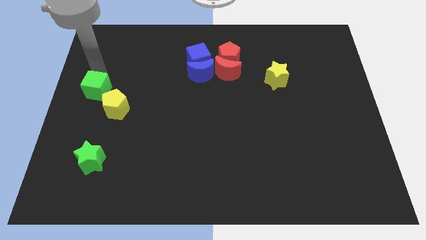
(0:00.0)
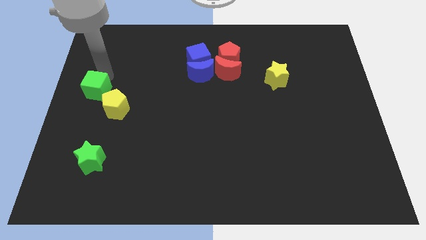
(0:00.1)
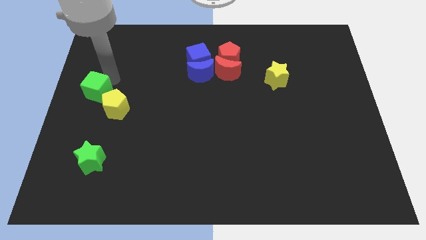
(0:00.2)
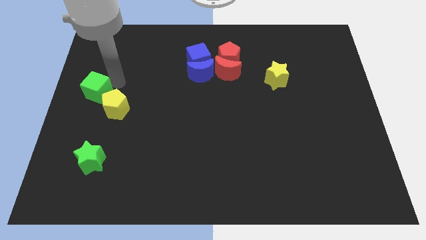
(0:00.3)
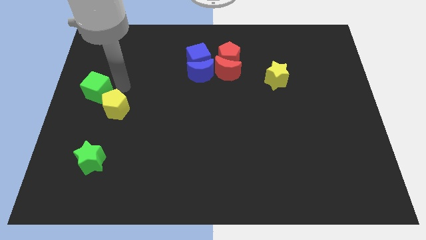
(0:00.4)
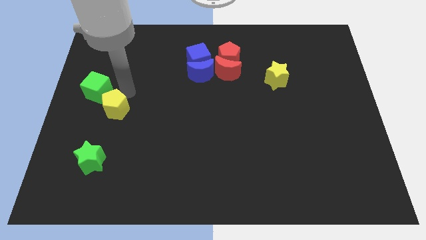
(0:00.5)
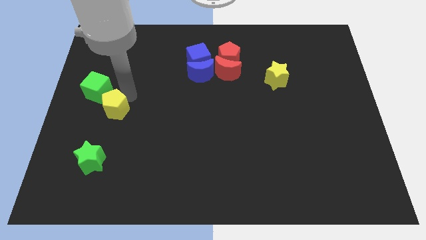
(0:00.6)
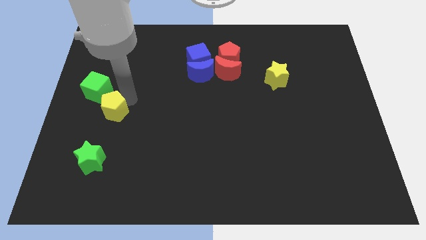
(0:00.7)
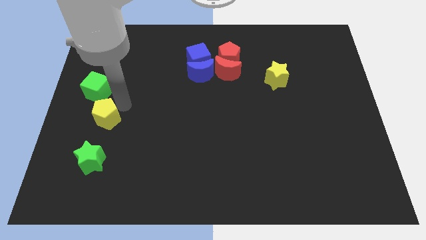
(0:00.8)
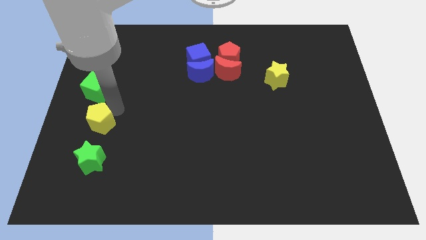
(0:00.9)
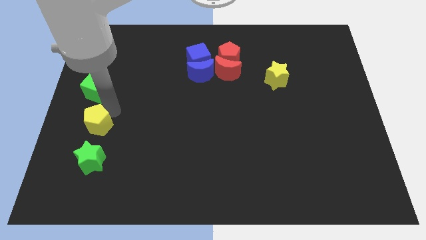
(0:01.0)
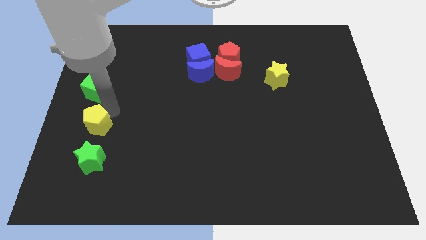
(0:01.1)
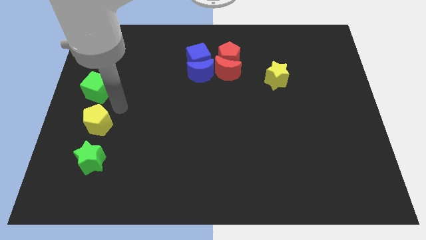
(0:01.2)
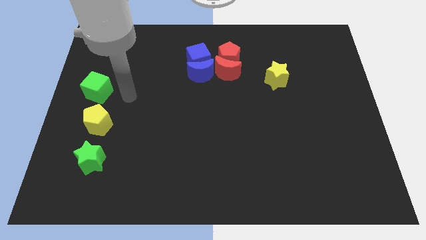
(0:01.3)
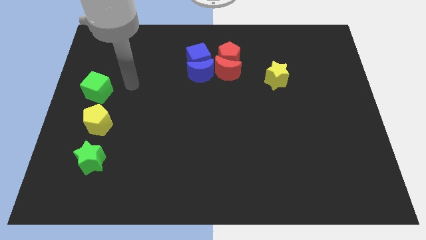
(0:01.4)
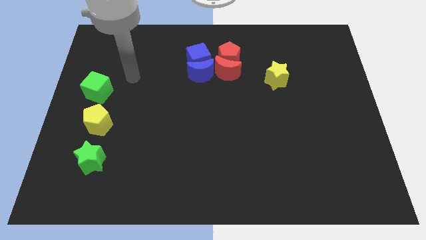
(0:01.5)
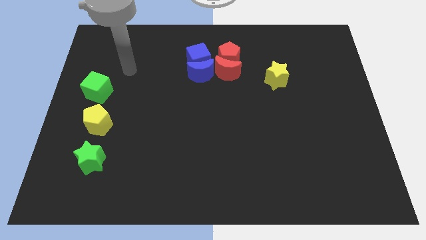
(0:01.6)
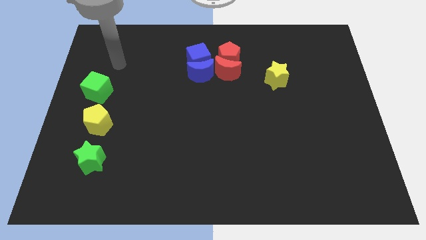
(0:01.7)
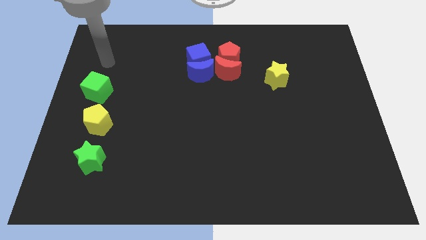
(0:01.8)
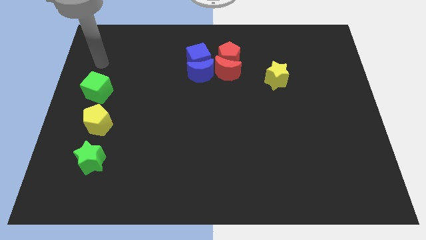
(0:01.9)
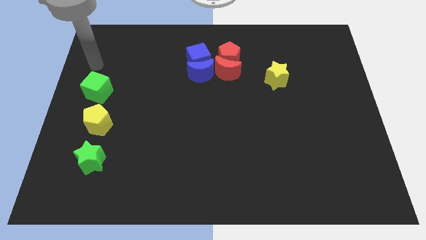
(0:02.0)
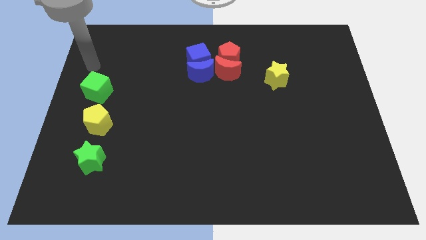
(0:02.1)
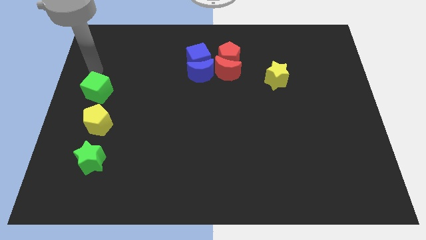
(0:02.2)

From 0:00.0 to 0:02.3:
slightly push the yellow pentagon towards the green star

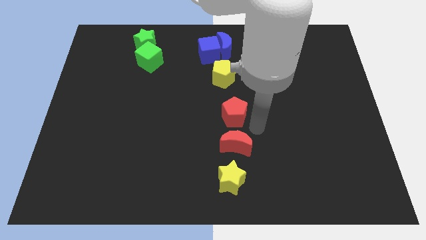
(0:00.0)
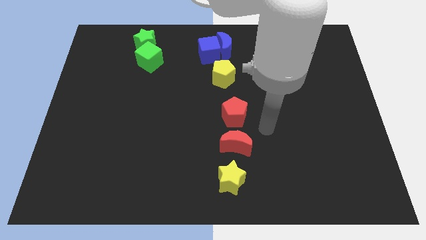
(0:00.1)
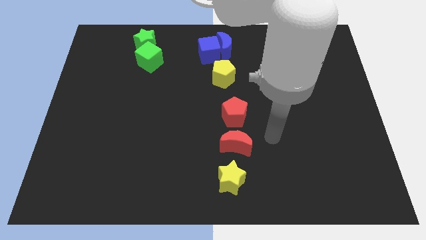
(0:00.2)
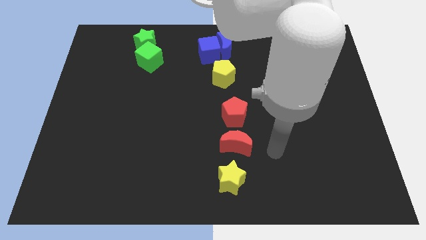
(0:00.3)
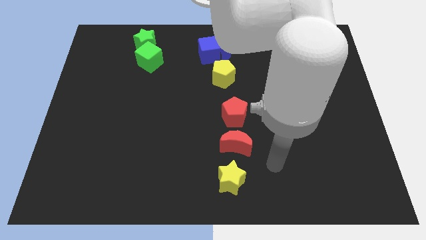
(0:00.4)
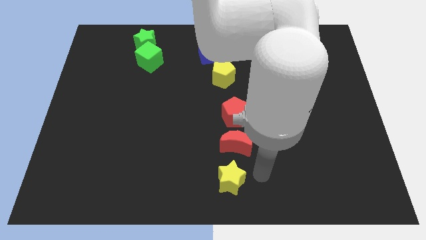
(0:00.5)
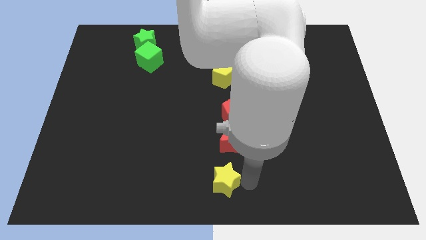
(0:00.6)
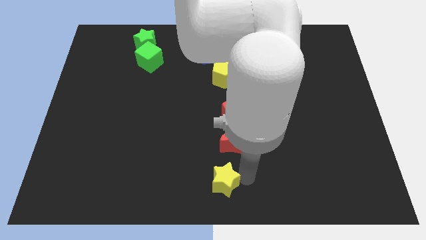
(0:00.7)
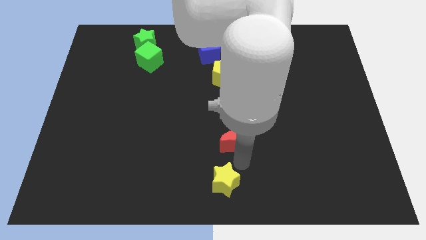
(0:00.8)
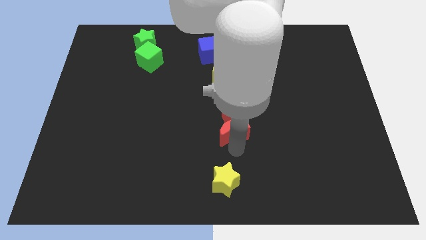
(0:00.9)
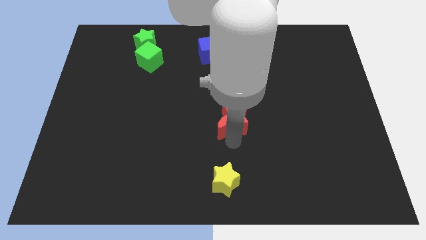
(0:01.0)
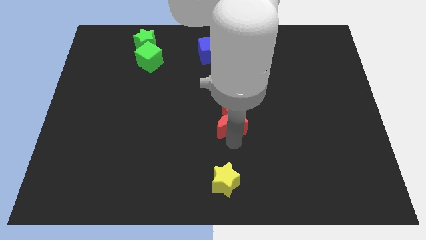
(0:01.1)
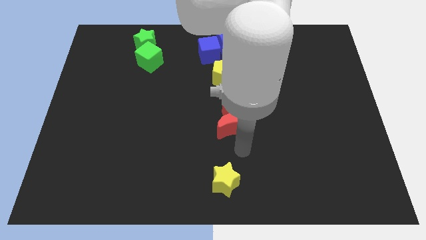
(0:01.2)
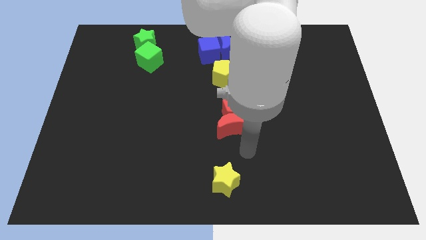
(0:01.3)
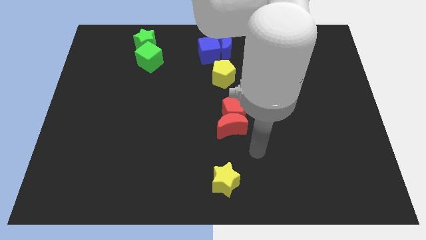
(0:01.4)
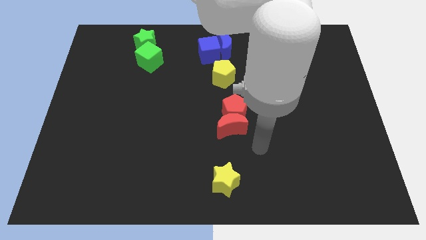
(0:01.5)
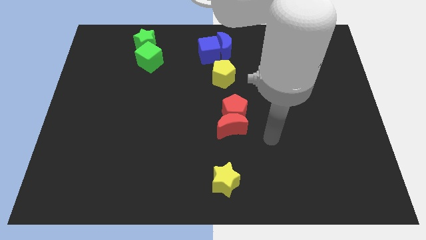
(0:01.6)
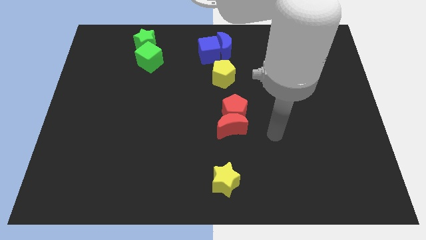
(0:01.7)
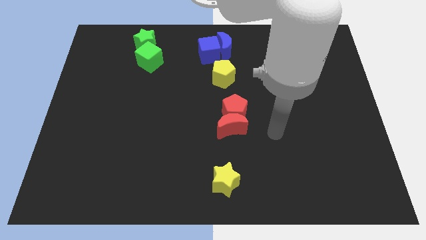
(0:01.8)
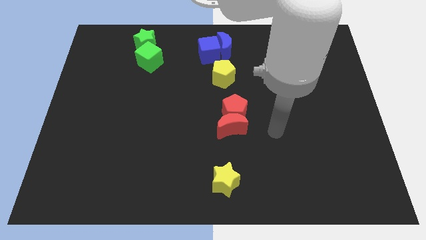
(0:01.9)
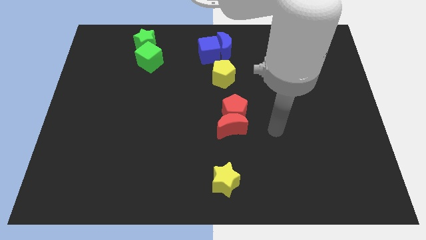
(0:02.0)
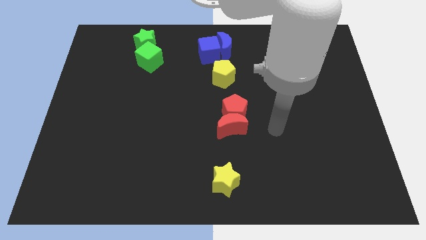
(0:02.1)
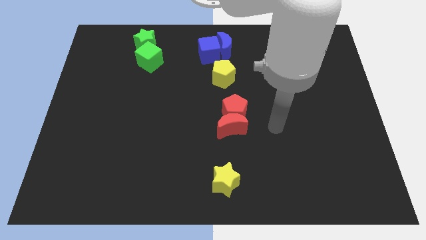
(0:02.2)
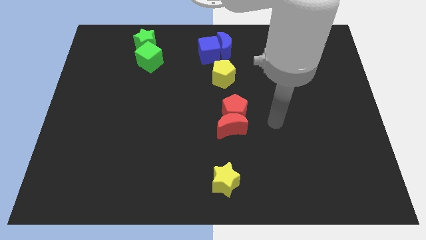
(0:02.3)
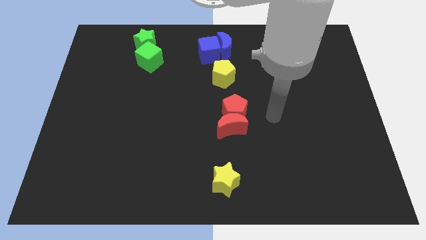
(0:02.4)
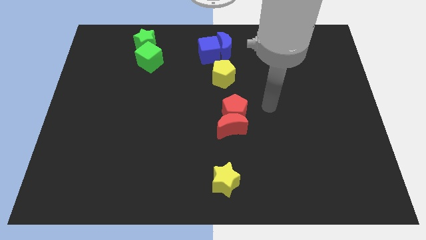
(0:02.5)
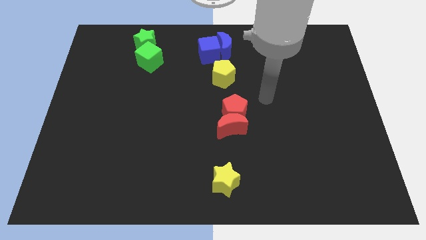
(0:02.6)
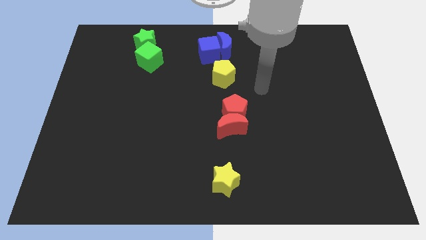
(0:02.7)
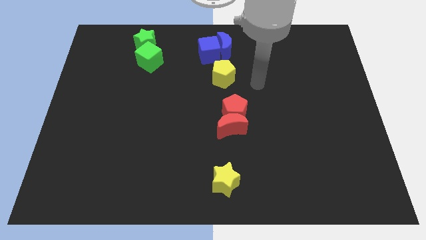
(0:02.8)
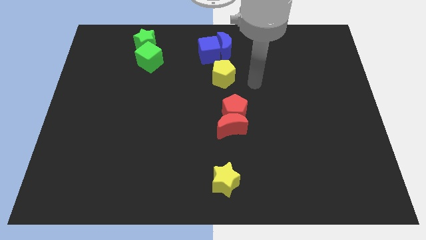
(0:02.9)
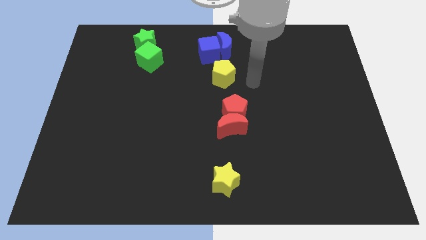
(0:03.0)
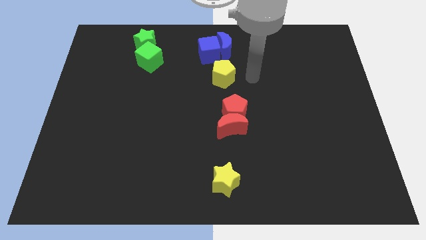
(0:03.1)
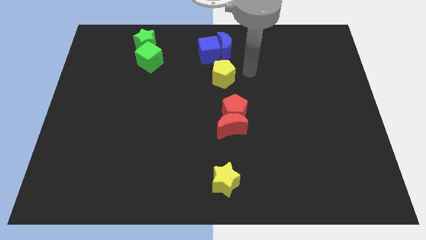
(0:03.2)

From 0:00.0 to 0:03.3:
push the red crescent into the red pentagon

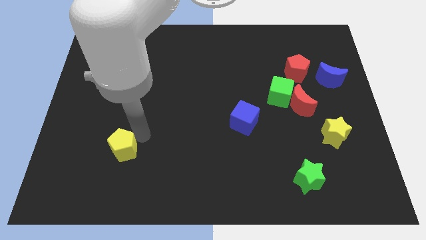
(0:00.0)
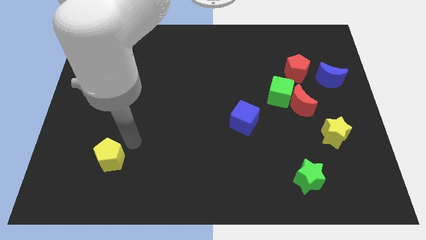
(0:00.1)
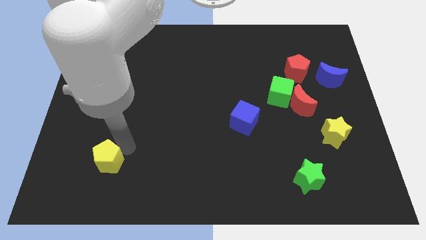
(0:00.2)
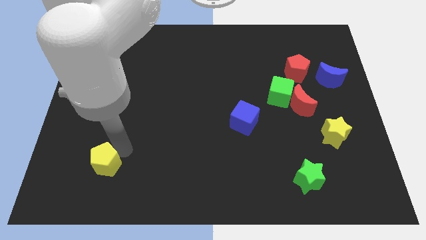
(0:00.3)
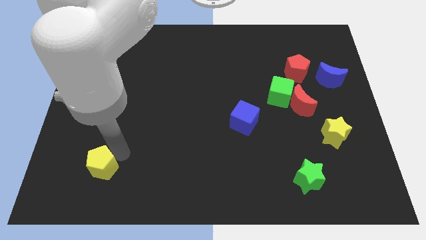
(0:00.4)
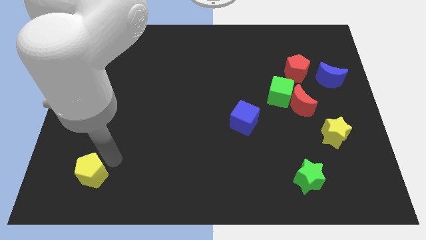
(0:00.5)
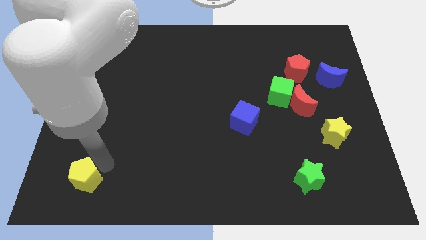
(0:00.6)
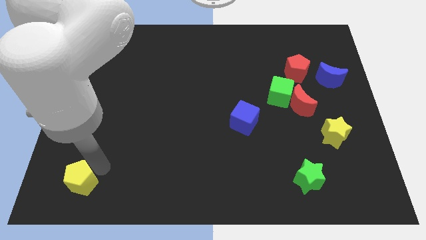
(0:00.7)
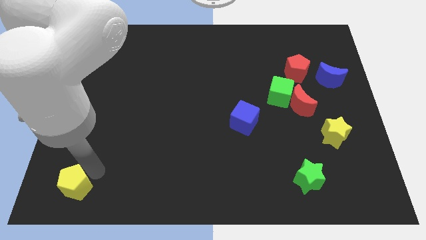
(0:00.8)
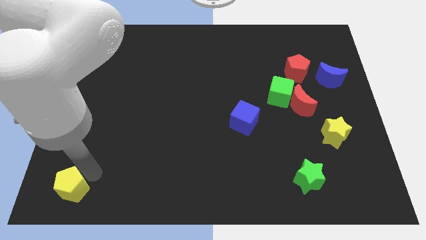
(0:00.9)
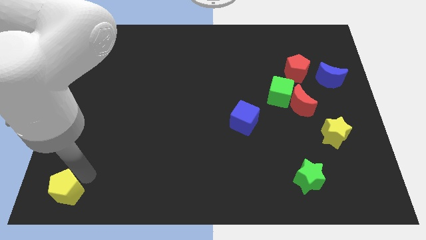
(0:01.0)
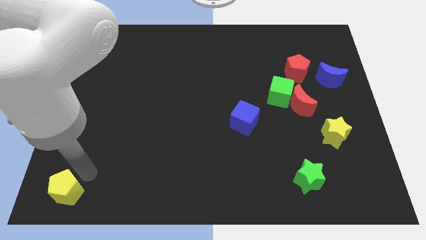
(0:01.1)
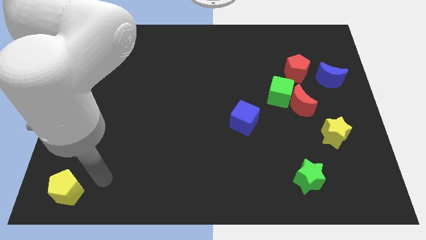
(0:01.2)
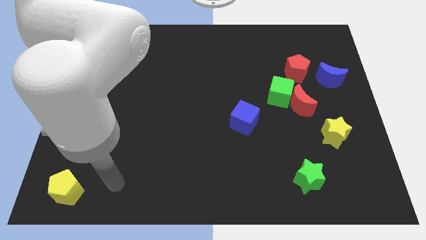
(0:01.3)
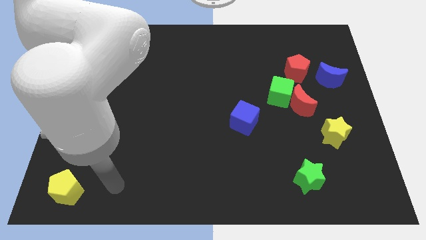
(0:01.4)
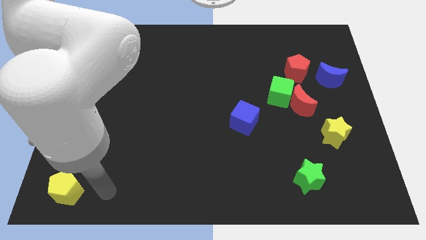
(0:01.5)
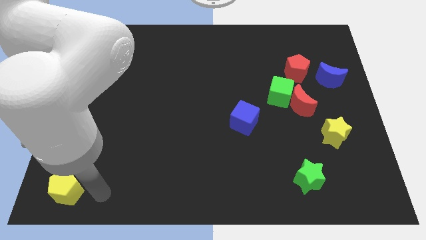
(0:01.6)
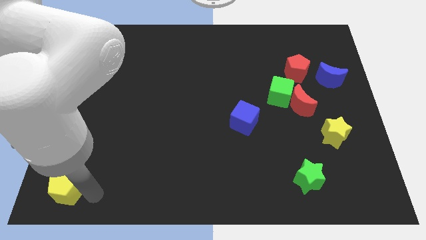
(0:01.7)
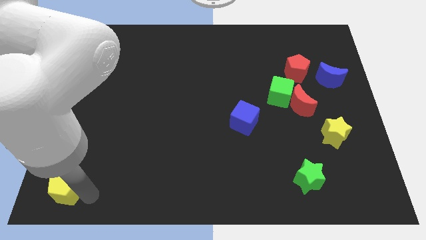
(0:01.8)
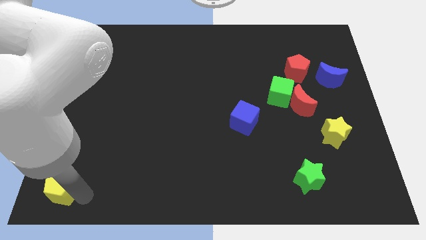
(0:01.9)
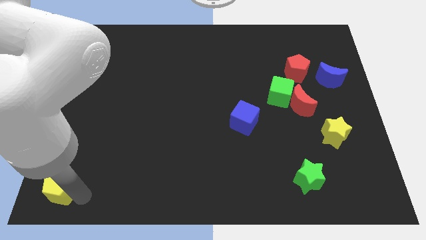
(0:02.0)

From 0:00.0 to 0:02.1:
push yellow pentagon to the bottom left

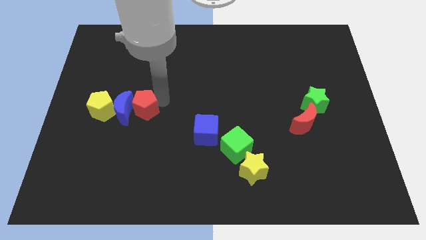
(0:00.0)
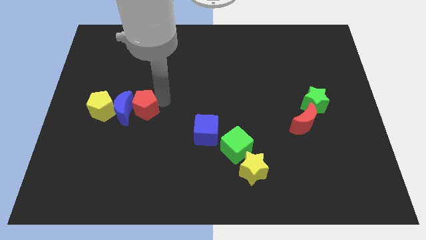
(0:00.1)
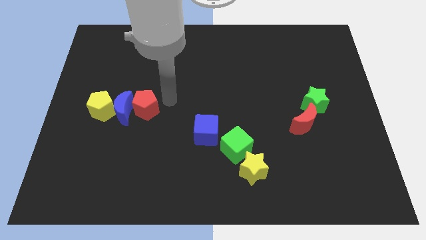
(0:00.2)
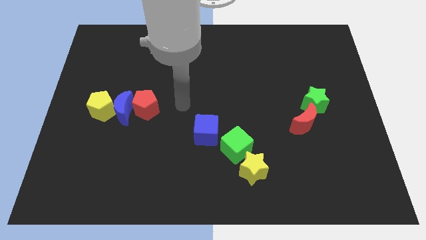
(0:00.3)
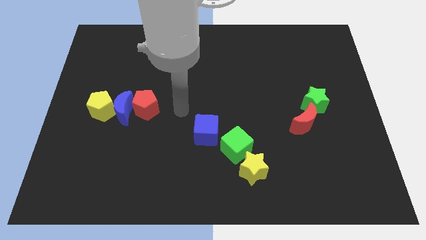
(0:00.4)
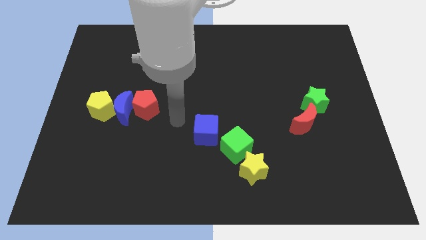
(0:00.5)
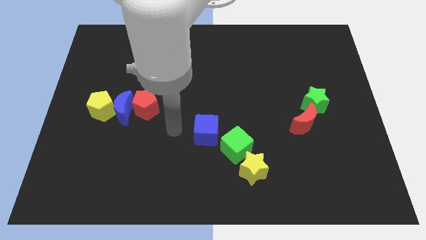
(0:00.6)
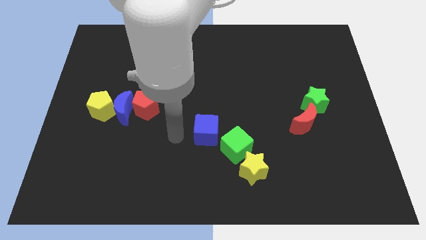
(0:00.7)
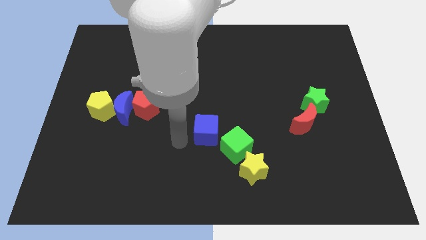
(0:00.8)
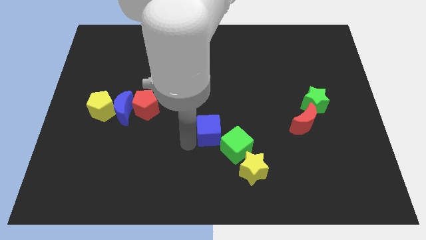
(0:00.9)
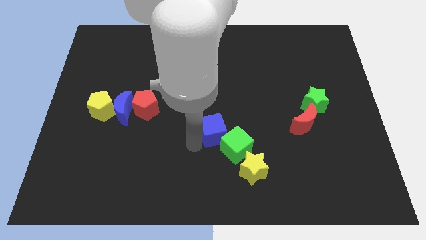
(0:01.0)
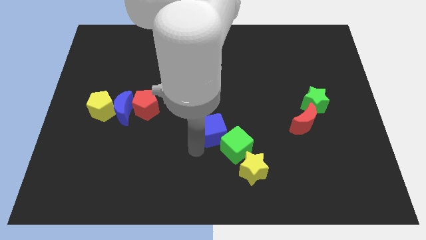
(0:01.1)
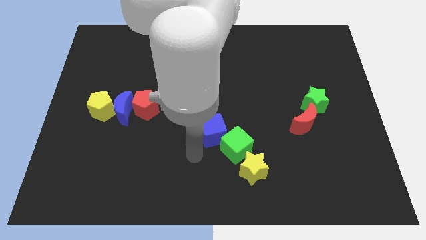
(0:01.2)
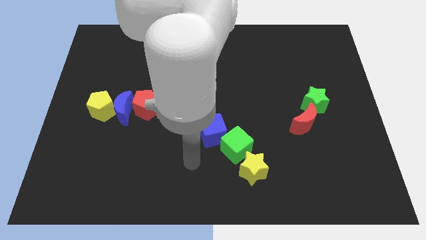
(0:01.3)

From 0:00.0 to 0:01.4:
slightly push the blue cube towards the green cube
